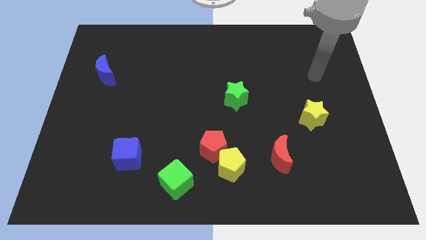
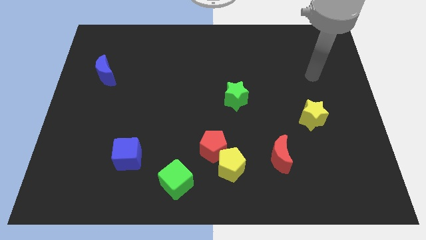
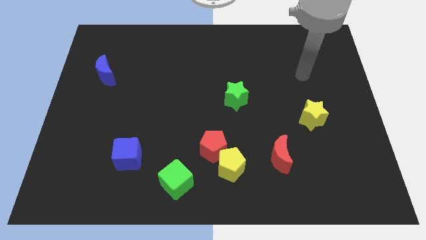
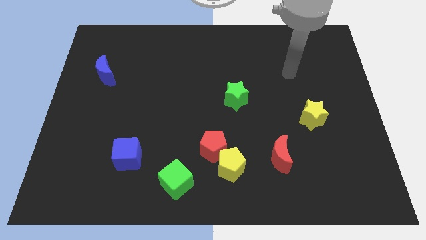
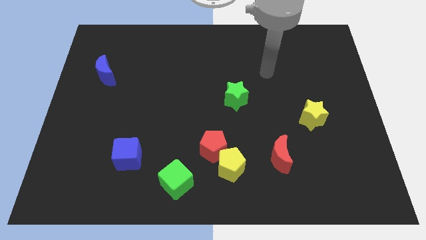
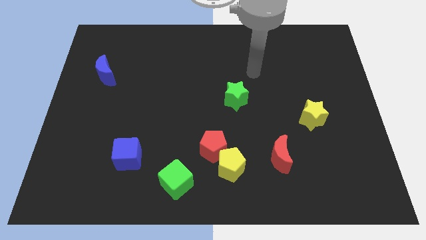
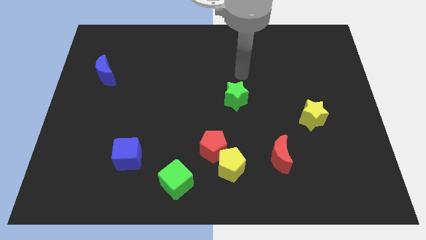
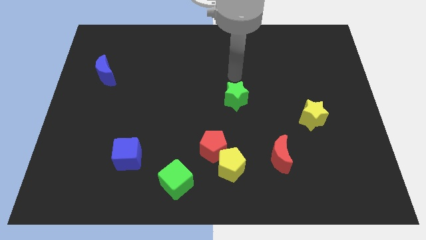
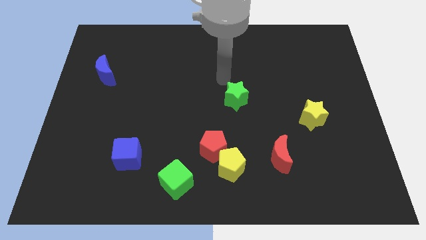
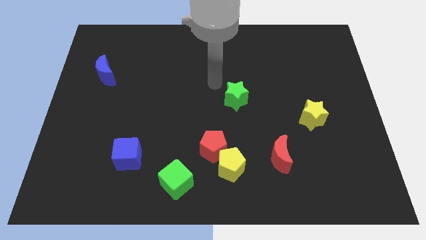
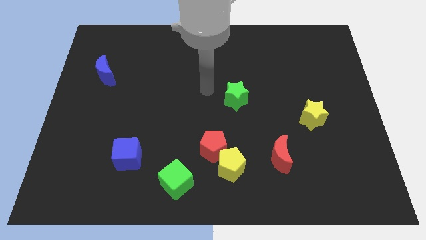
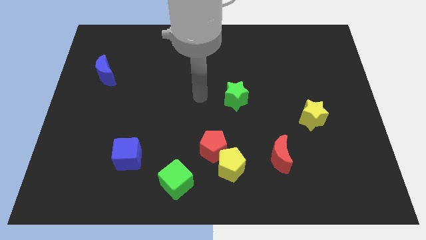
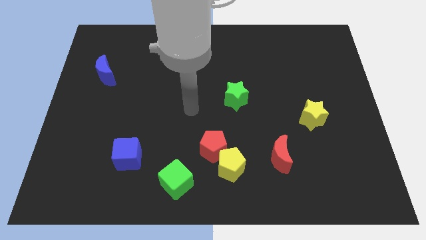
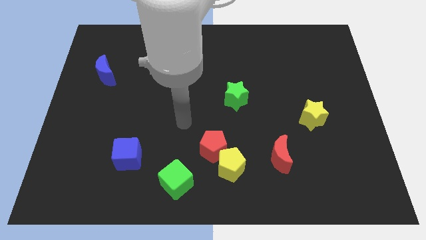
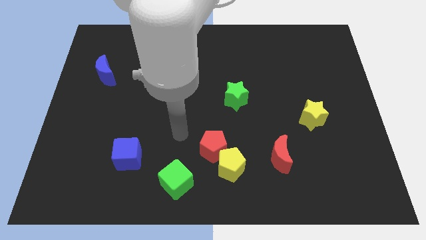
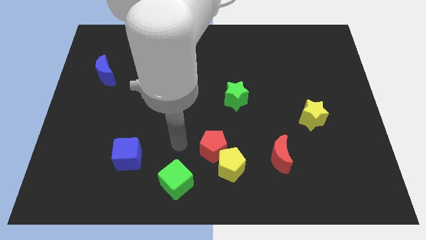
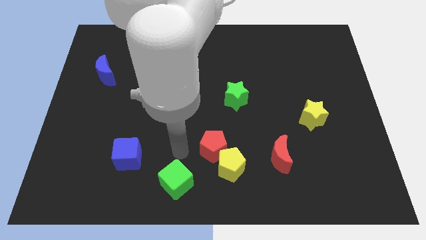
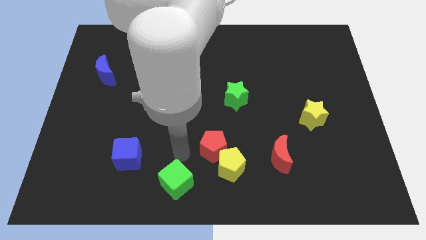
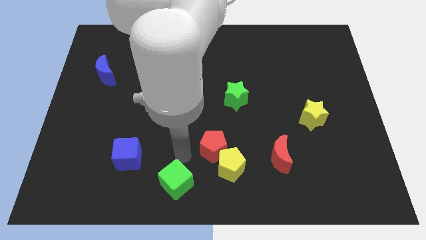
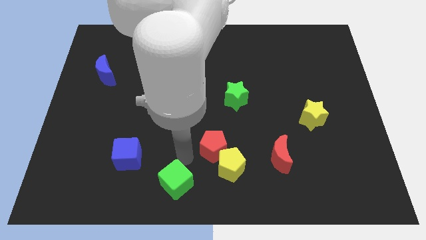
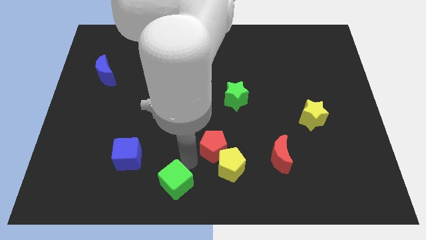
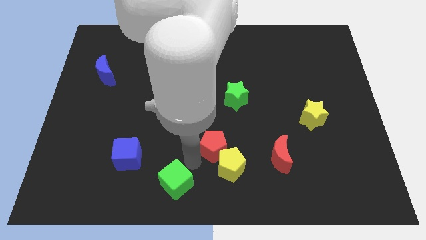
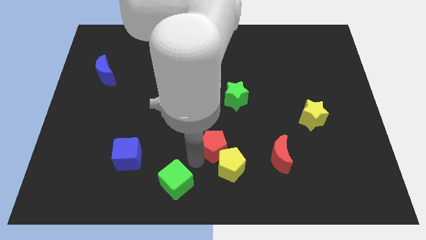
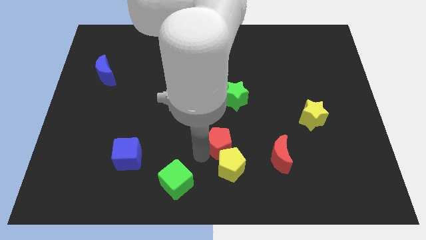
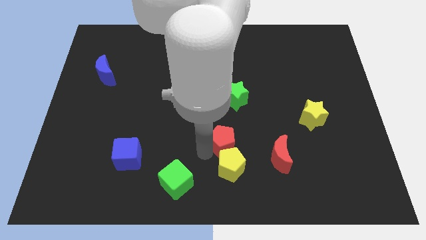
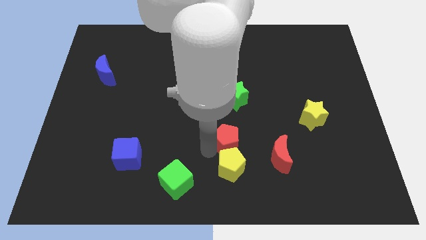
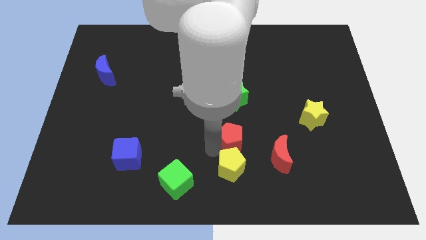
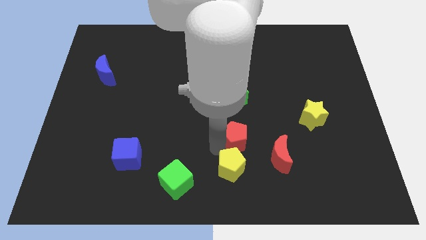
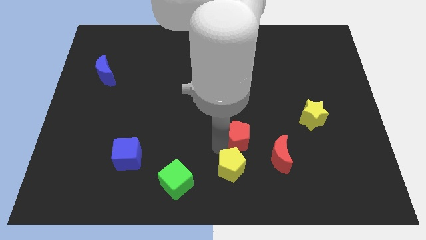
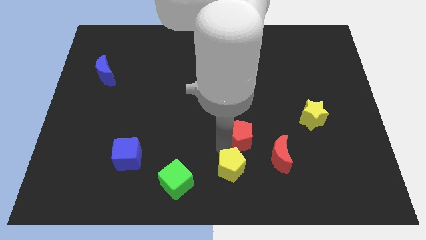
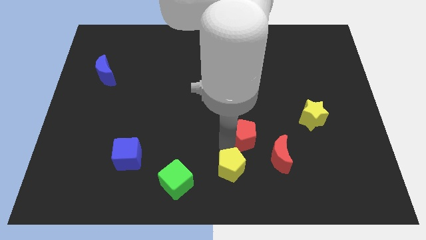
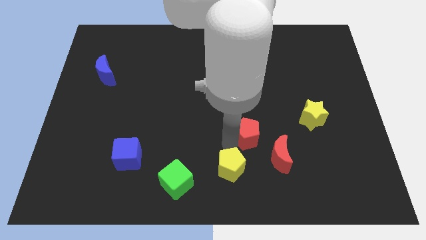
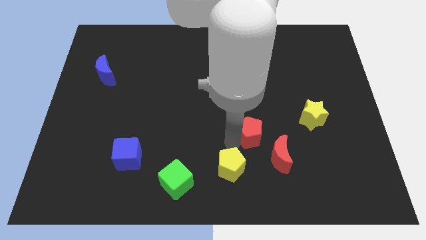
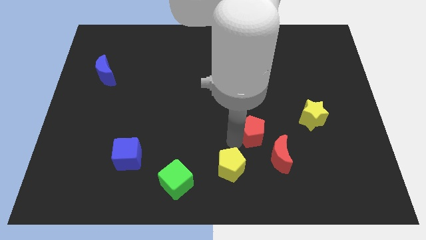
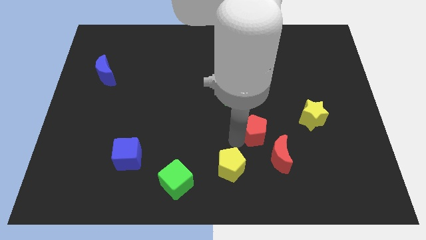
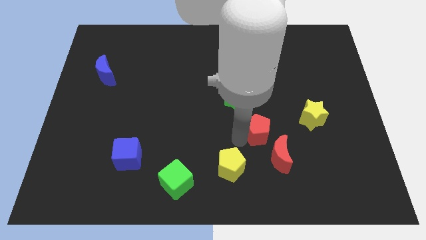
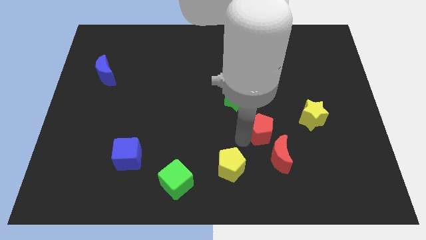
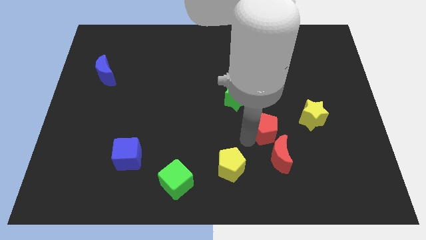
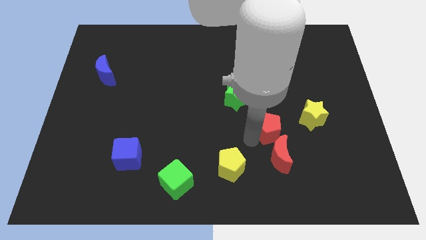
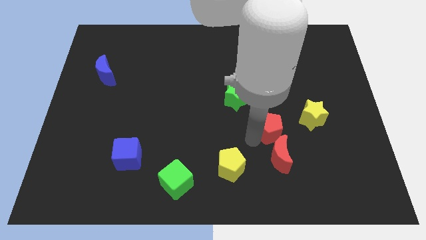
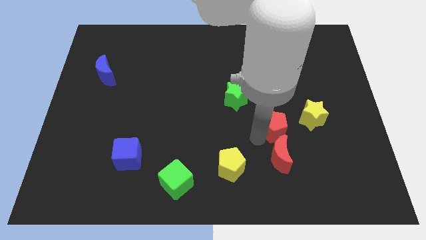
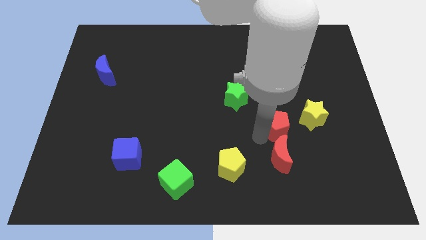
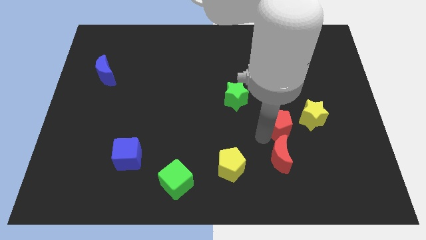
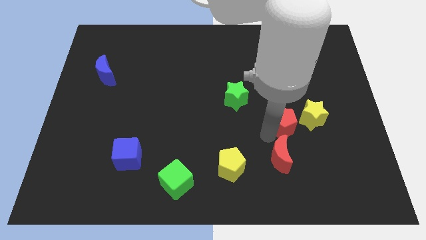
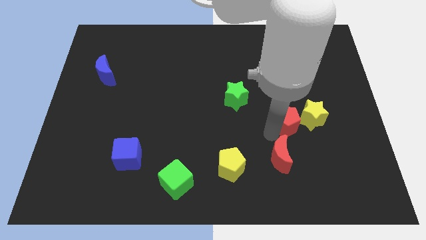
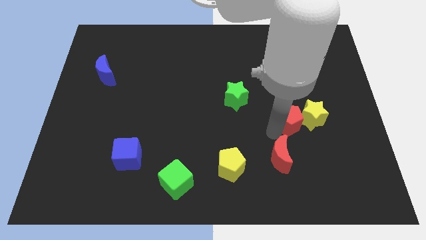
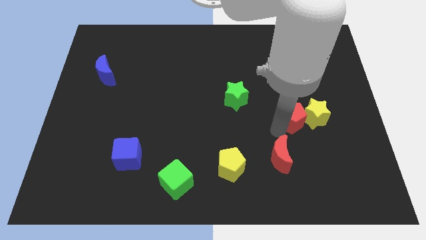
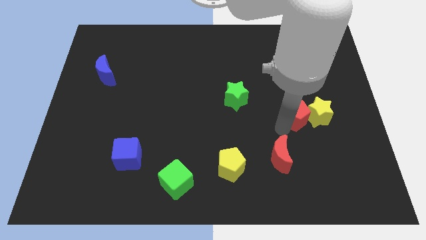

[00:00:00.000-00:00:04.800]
push the red pentagon to the yellow star

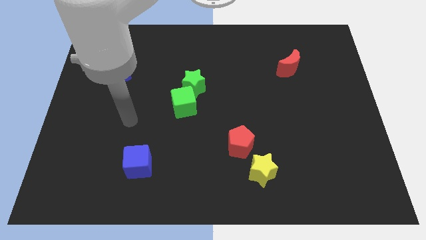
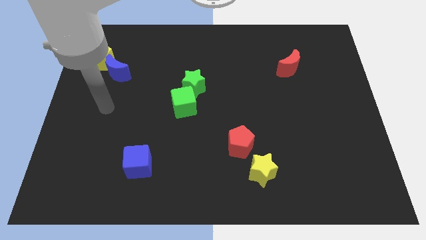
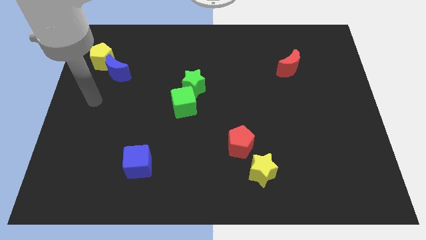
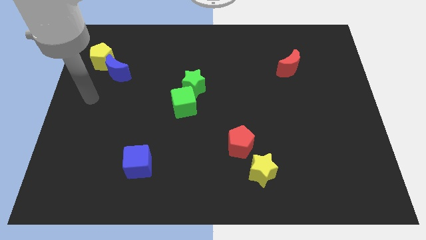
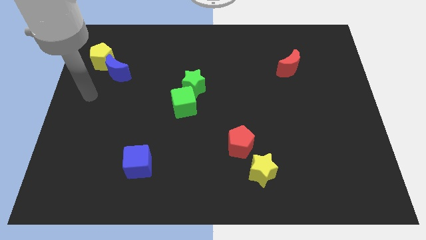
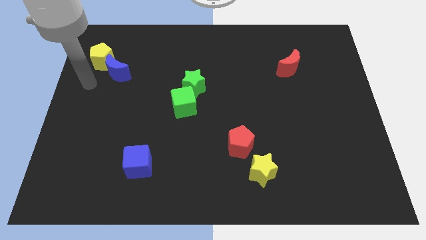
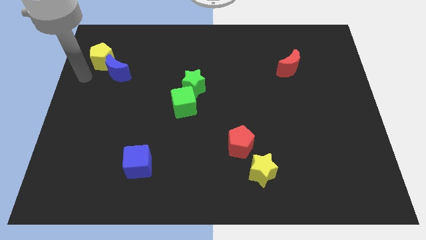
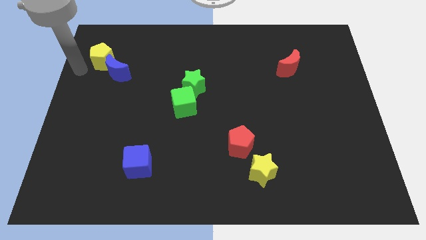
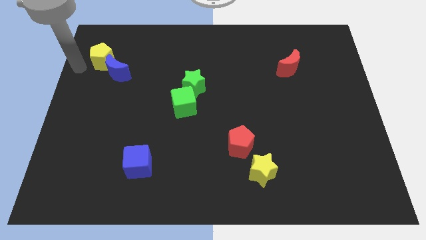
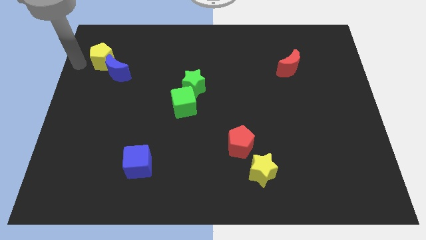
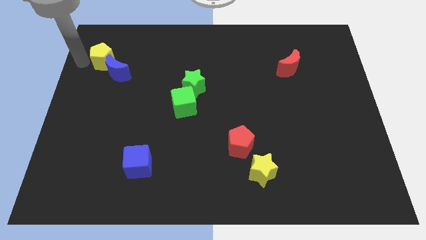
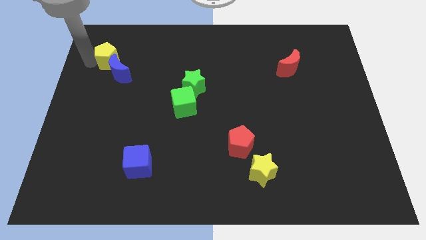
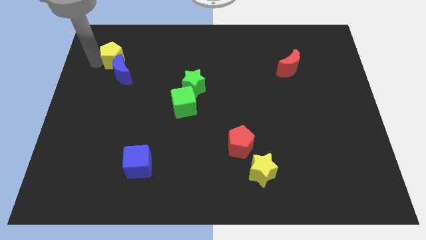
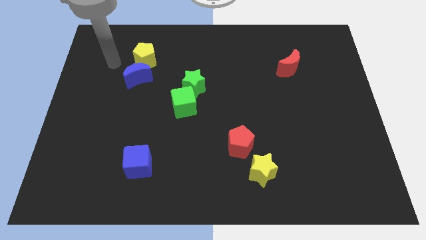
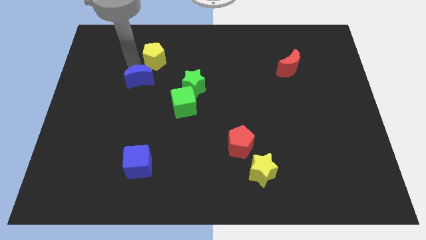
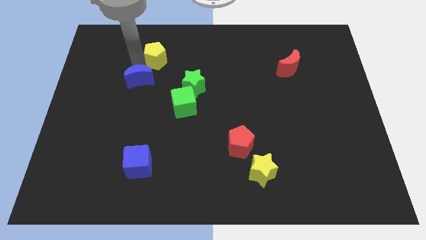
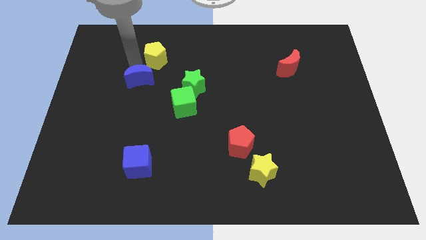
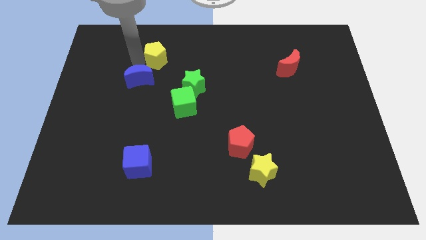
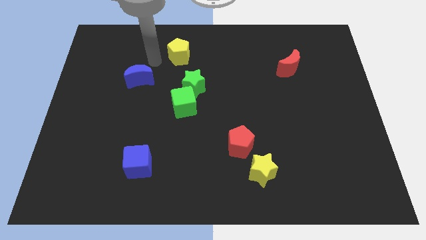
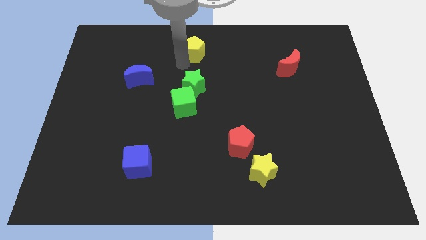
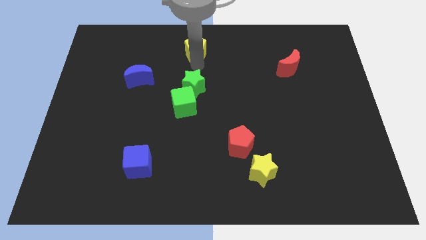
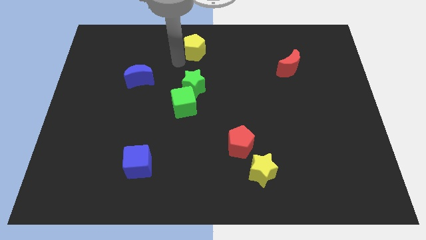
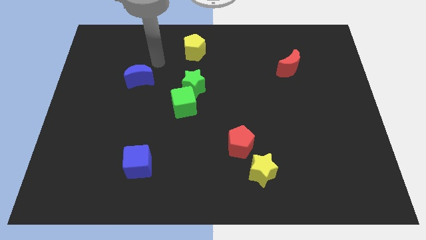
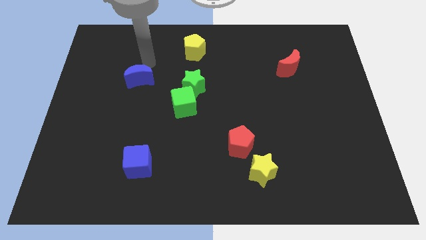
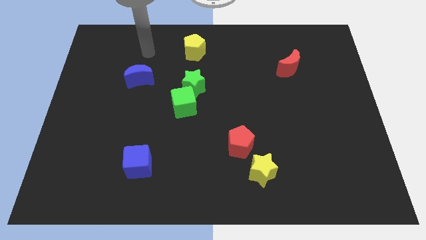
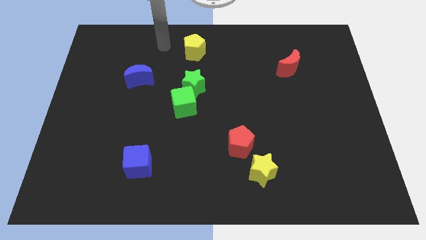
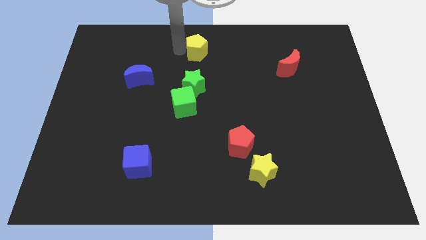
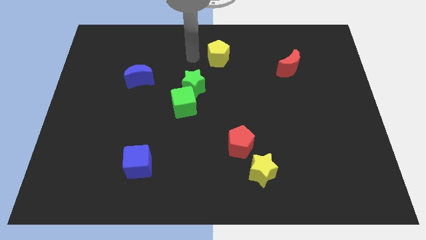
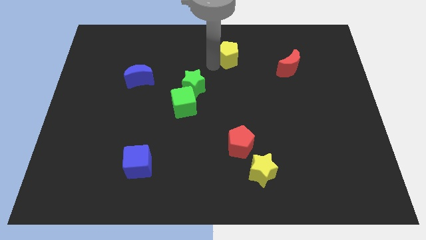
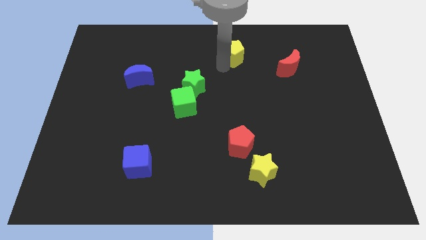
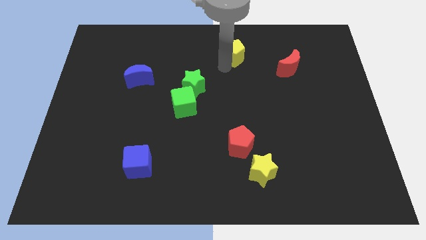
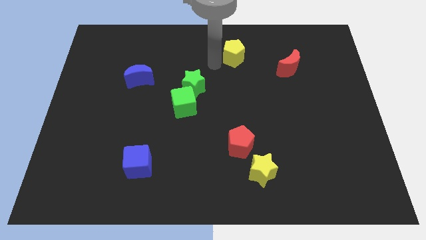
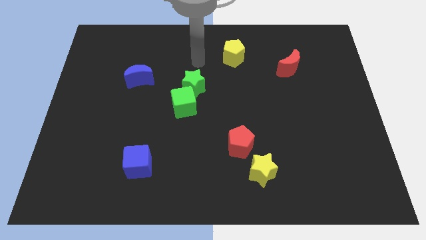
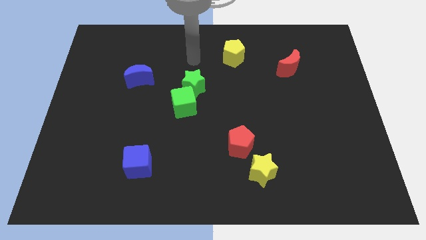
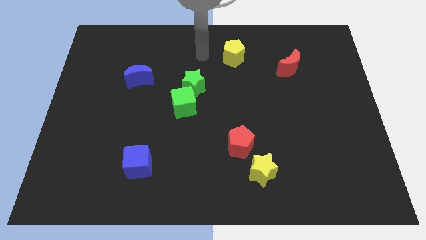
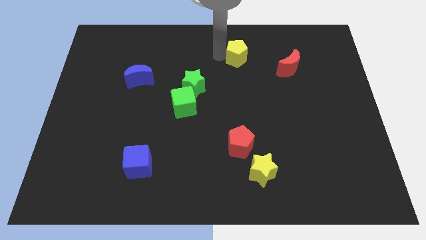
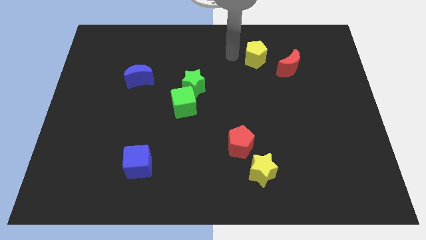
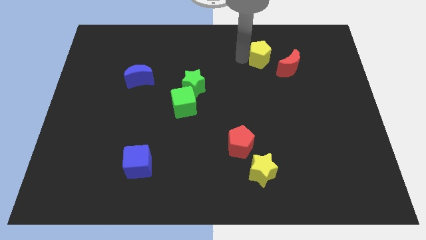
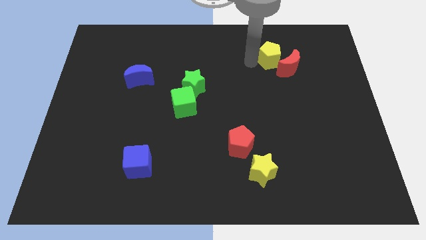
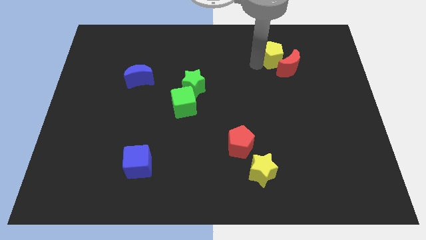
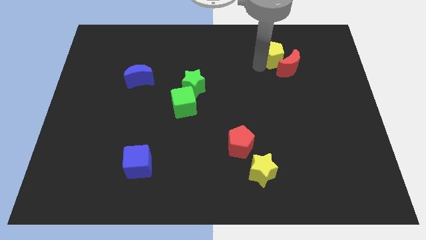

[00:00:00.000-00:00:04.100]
slide the yellow pentagon towards the red moon
